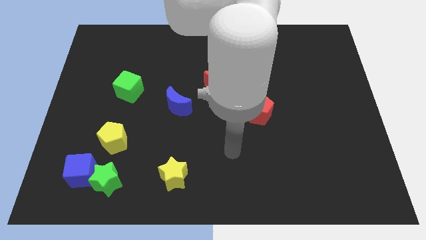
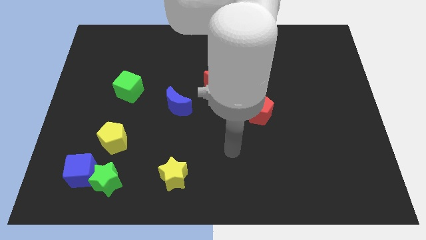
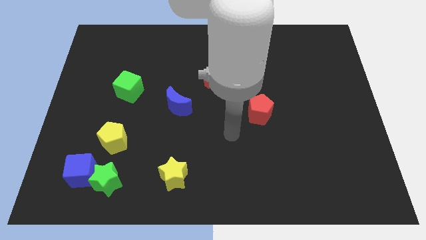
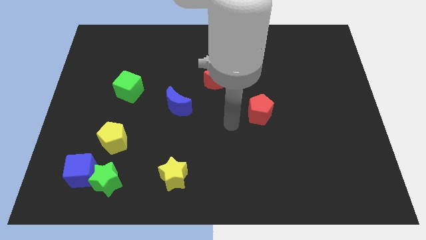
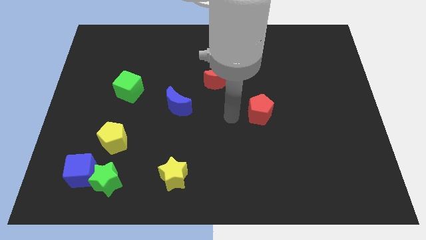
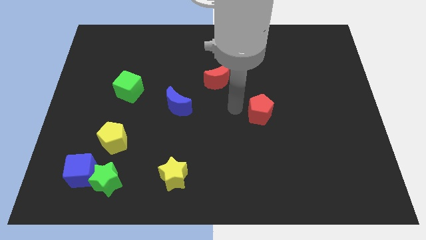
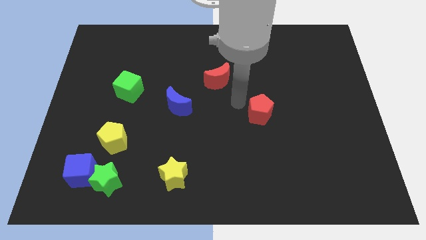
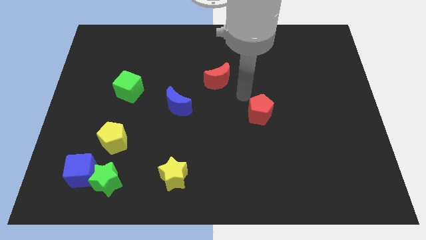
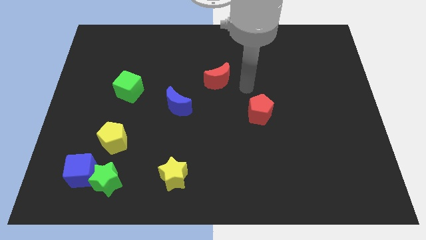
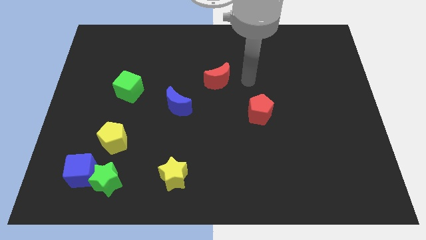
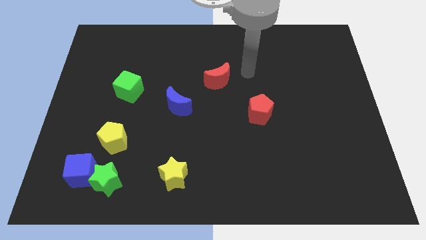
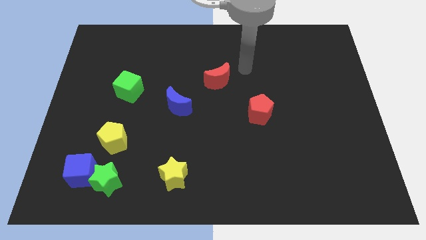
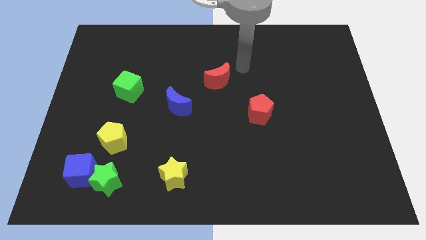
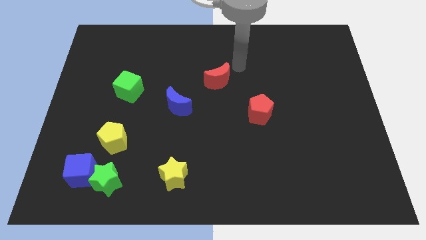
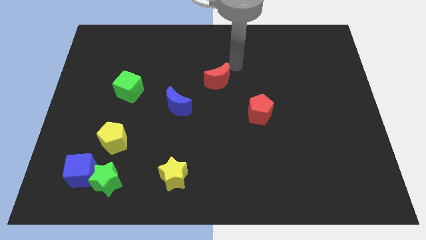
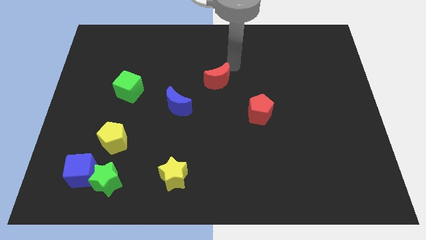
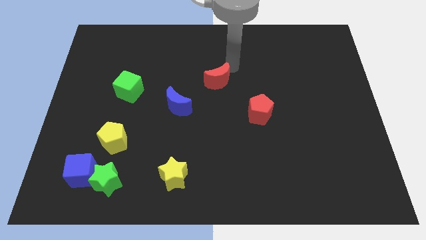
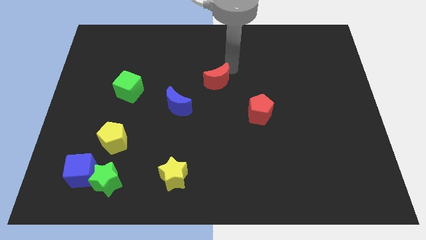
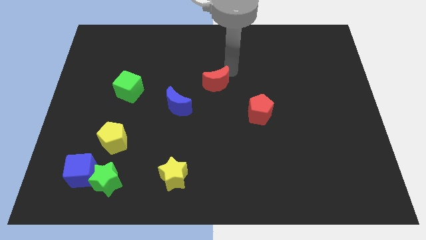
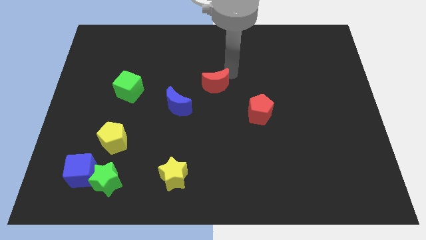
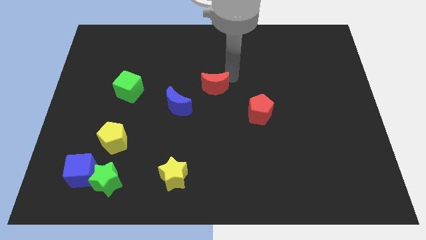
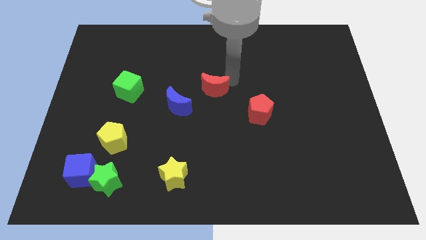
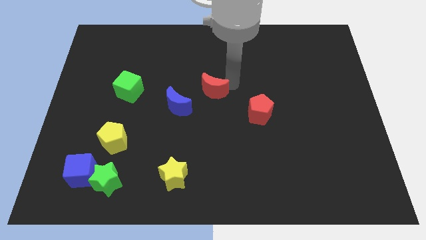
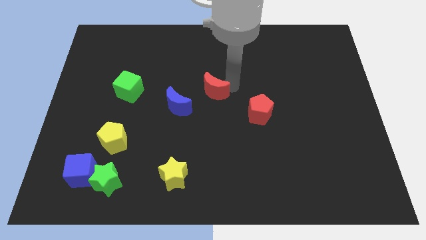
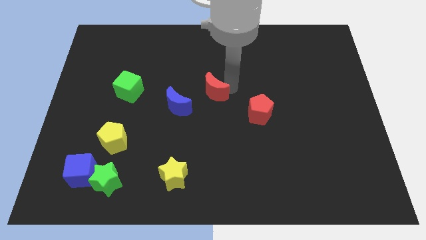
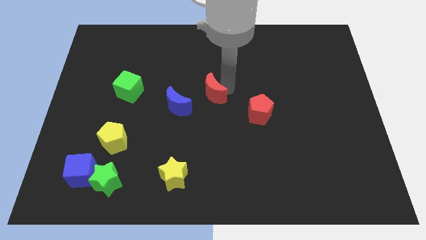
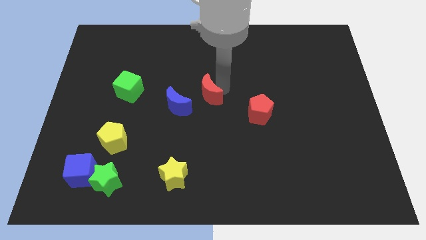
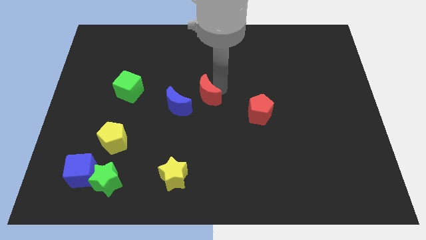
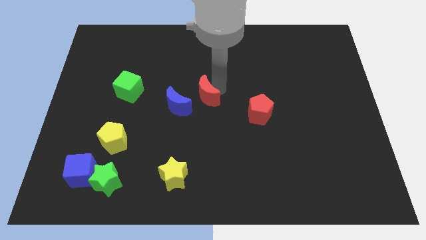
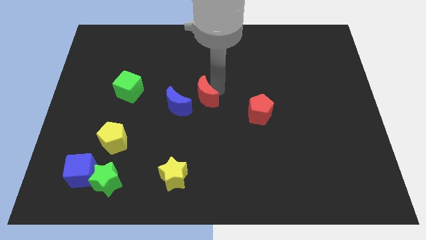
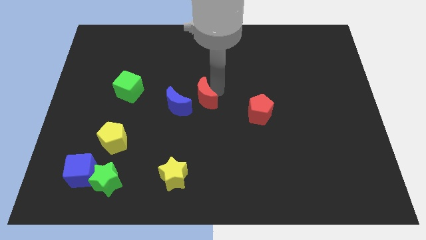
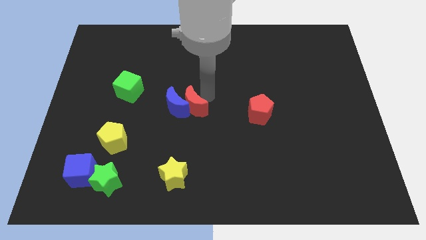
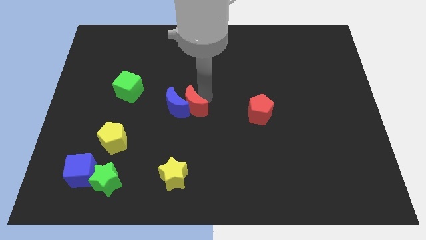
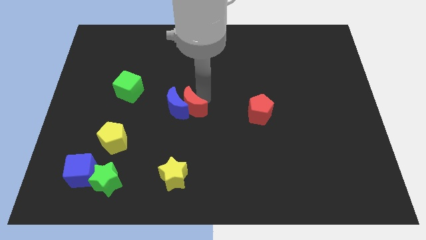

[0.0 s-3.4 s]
push the red moon next to the blue moon

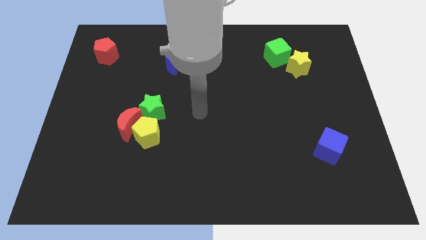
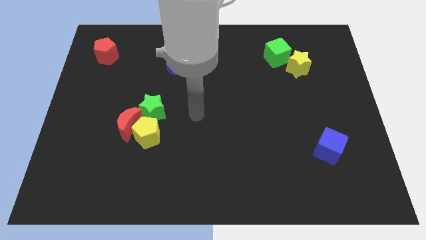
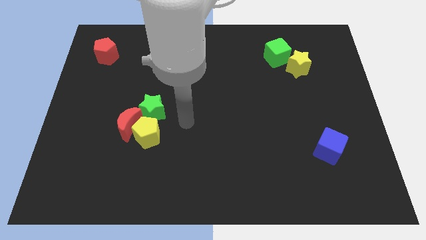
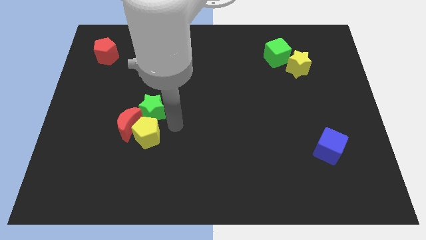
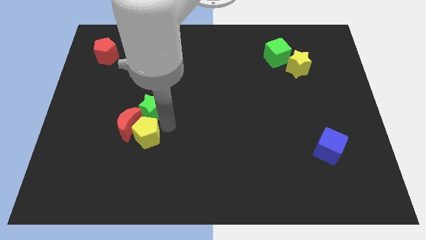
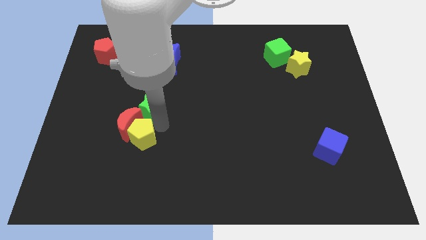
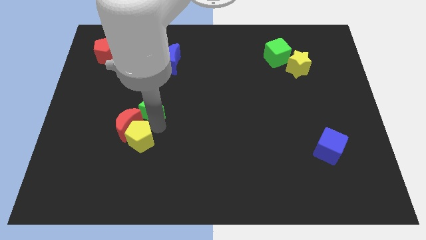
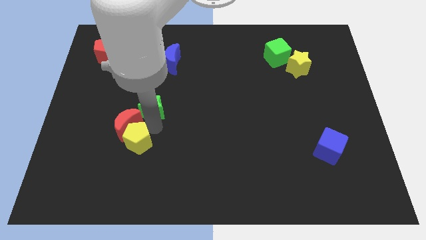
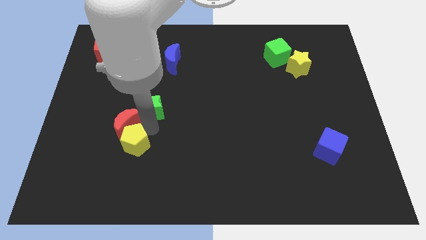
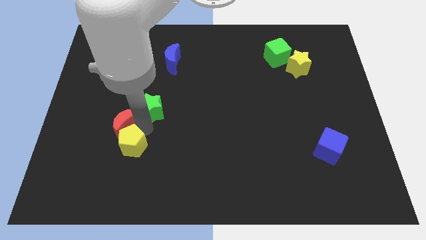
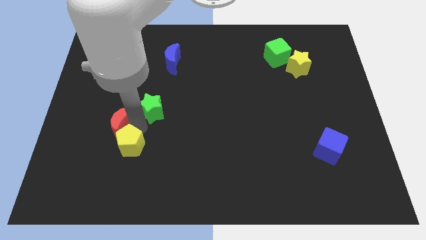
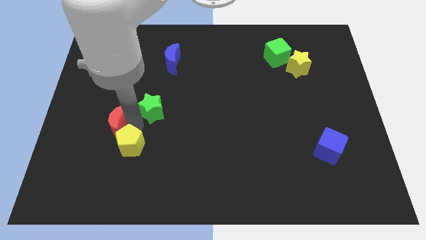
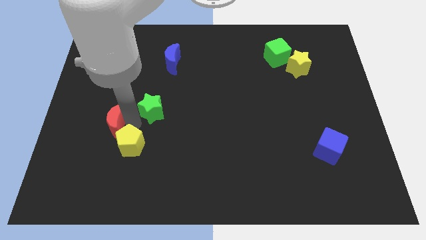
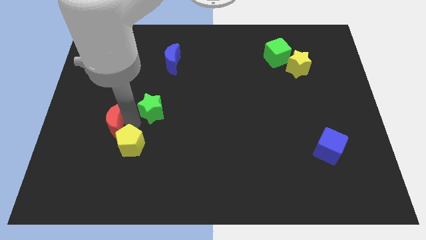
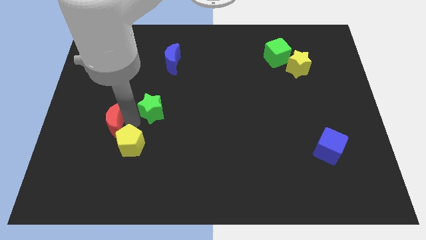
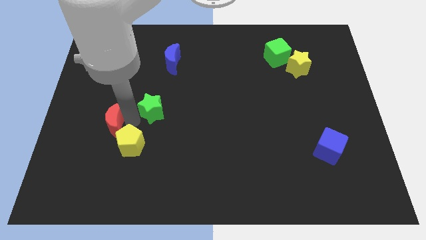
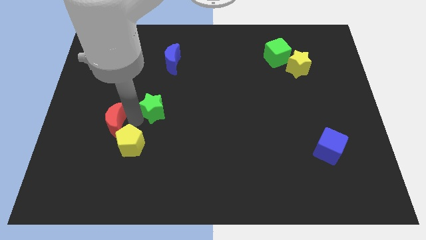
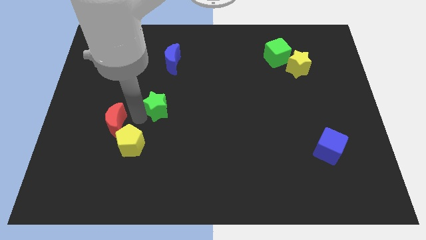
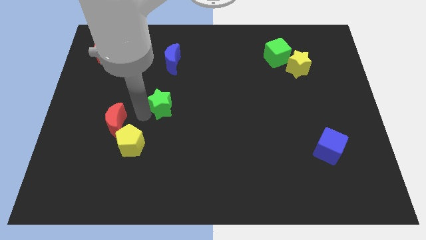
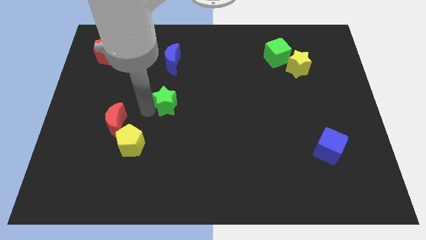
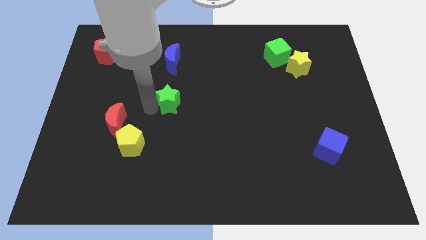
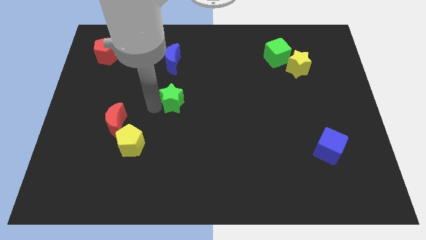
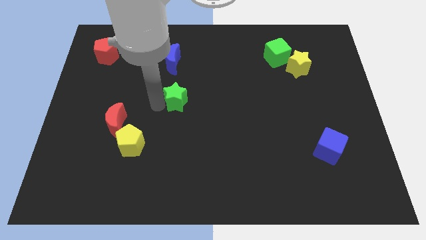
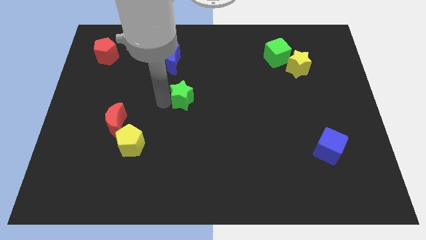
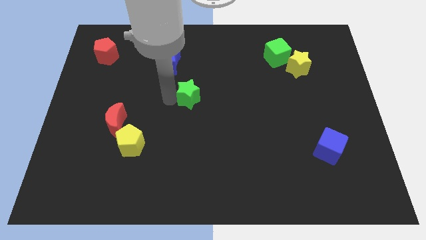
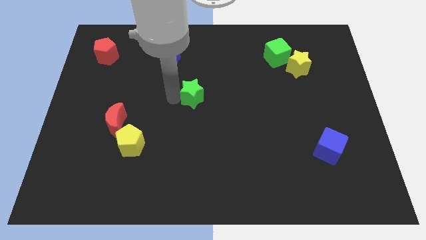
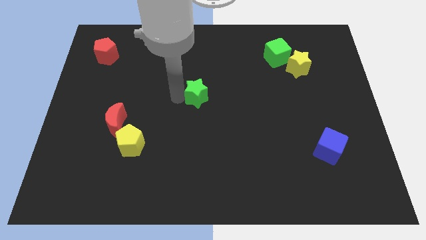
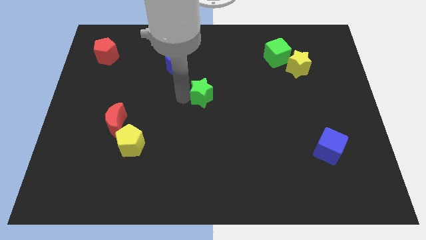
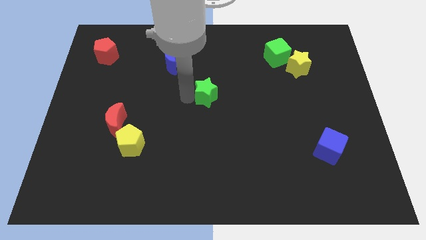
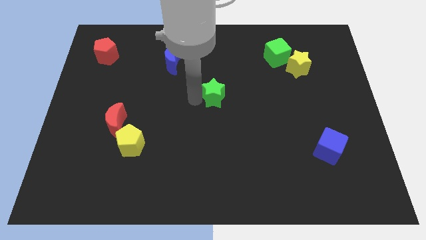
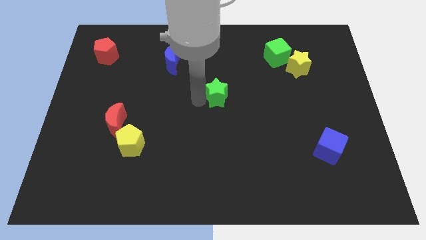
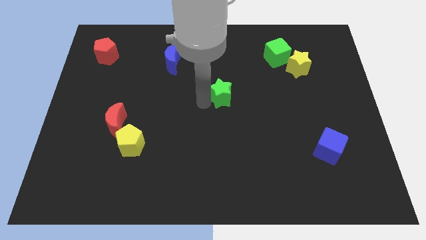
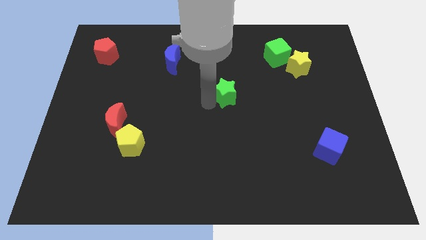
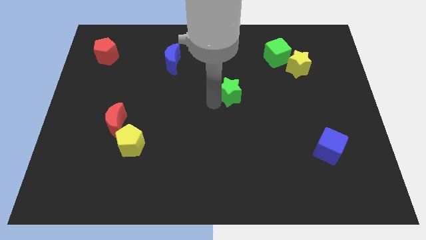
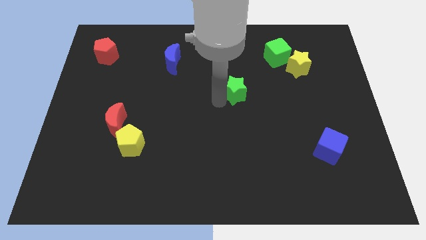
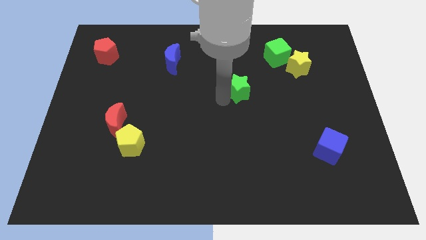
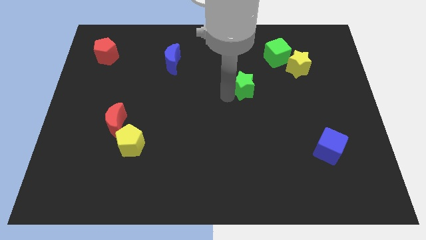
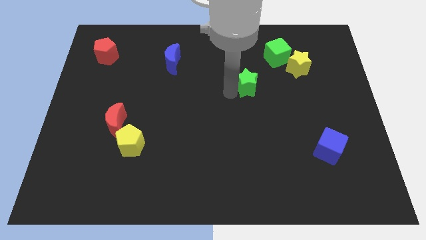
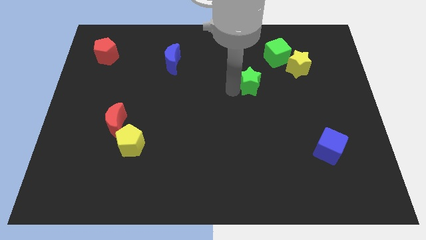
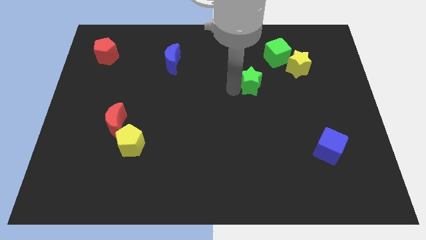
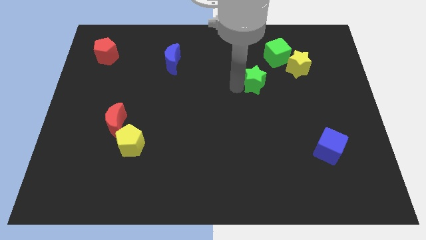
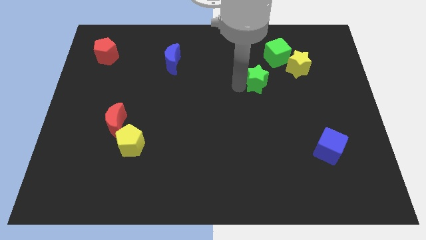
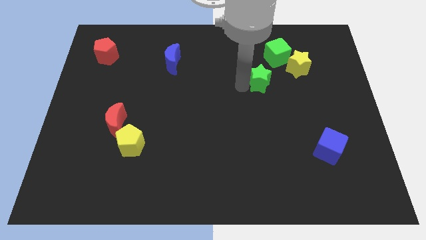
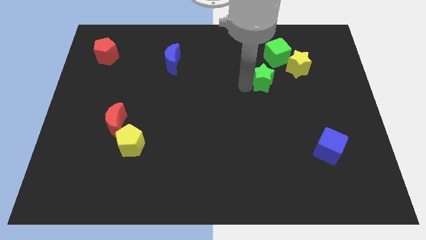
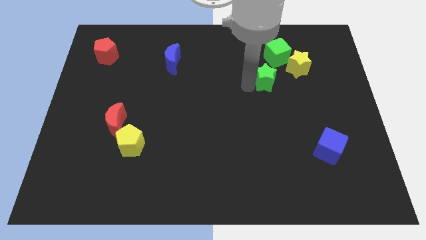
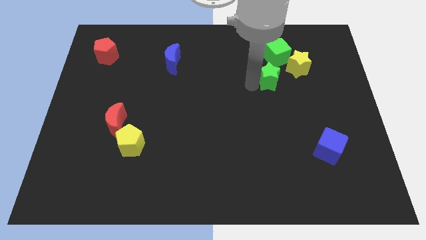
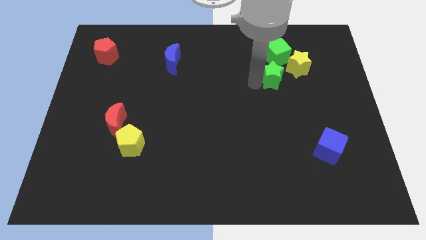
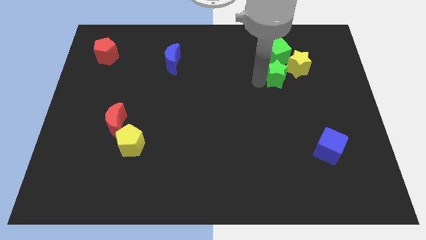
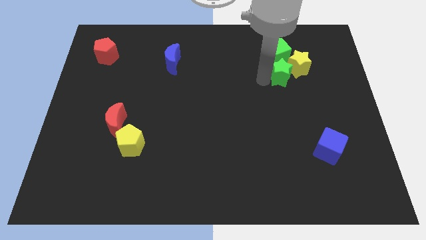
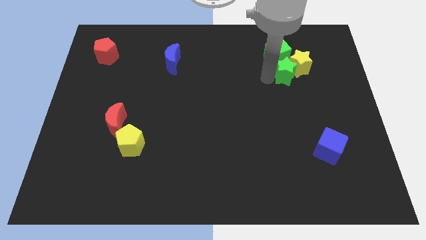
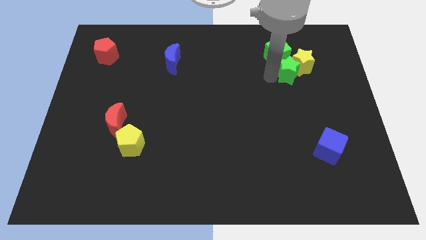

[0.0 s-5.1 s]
slide the green star towards the yellow star
